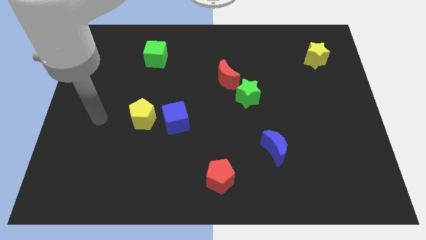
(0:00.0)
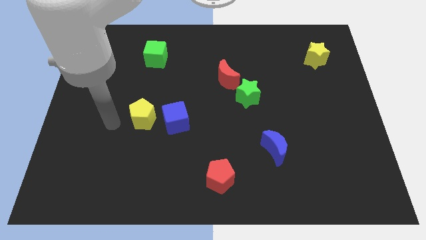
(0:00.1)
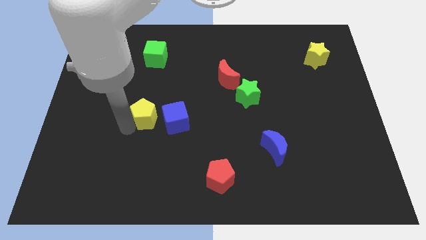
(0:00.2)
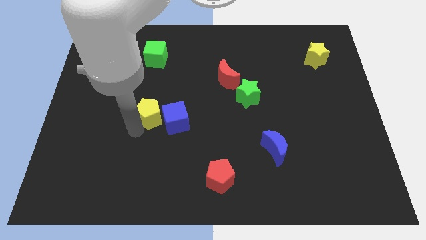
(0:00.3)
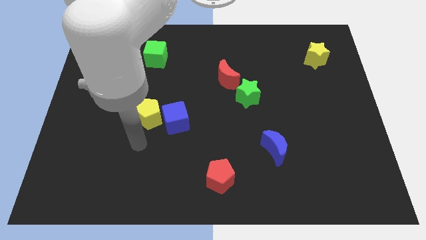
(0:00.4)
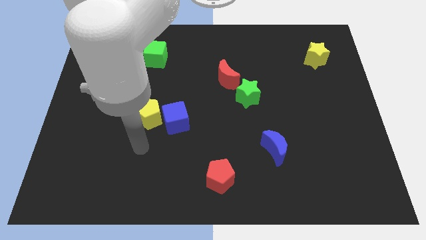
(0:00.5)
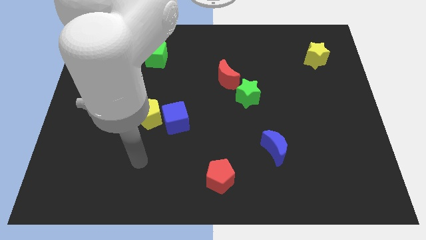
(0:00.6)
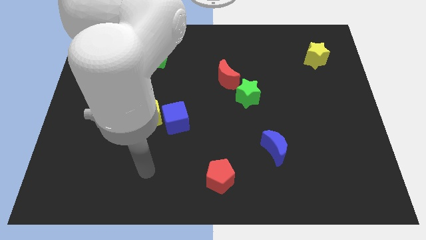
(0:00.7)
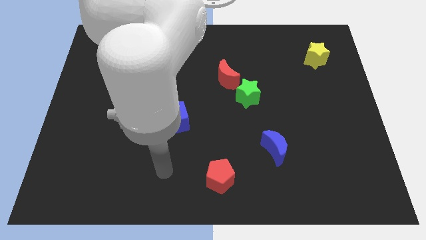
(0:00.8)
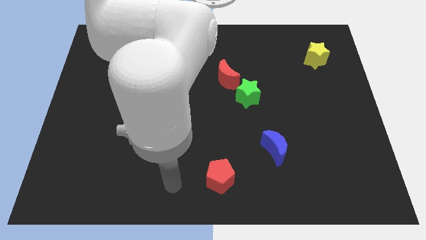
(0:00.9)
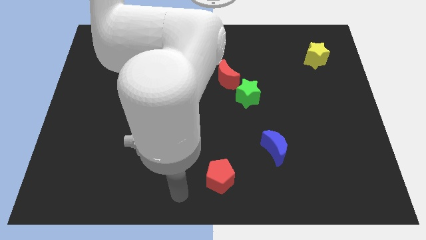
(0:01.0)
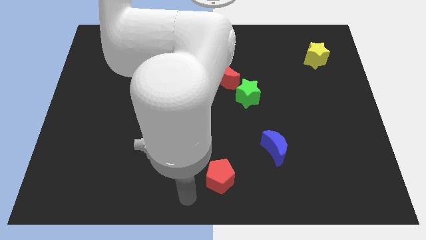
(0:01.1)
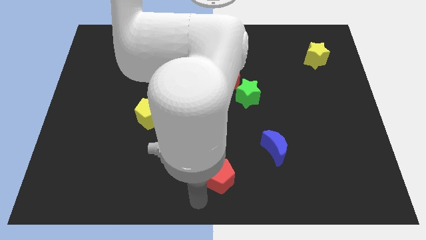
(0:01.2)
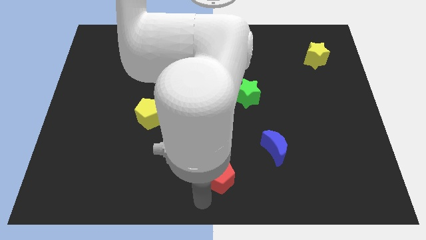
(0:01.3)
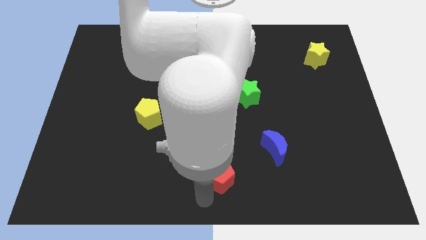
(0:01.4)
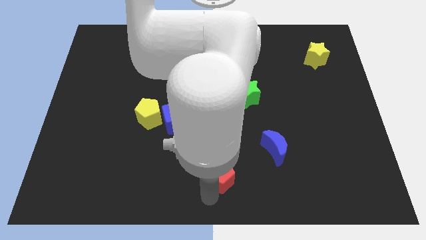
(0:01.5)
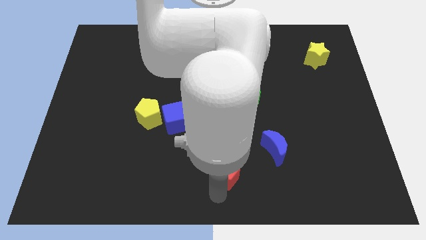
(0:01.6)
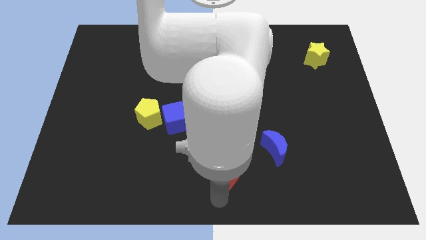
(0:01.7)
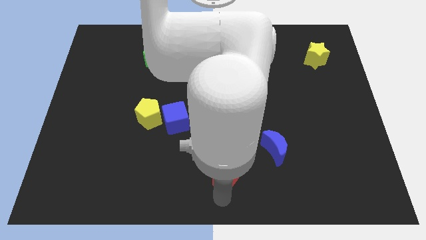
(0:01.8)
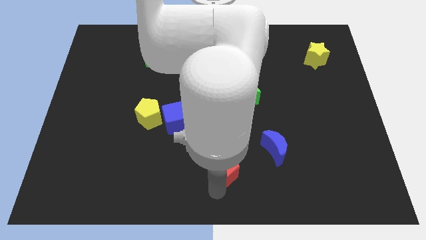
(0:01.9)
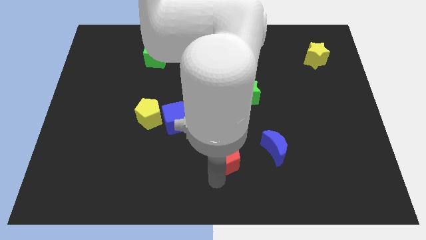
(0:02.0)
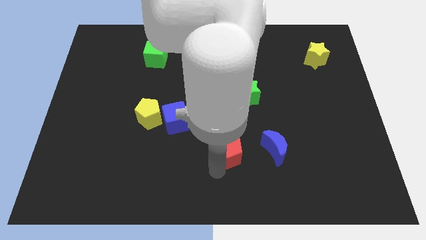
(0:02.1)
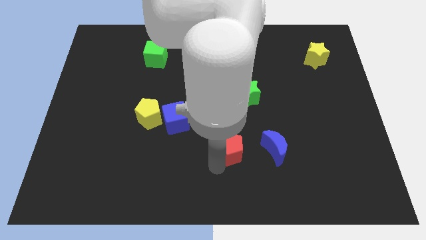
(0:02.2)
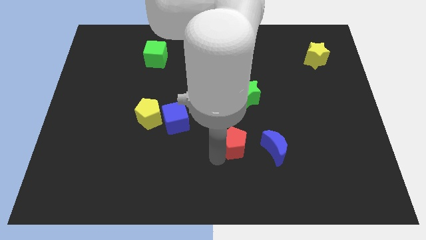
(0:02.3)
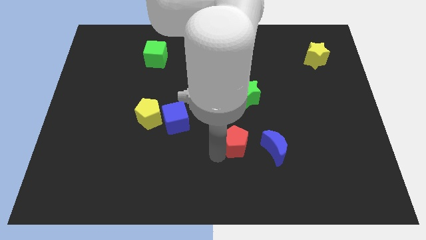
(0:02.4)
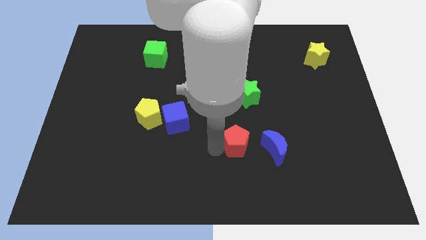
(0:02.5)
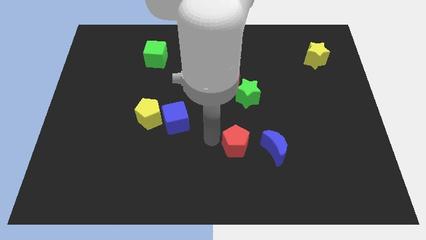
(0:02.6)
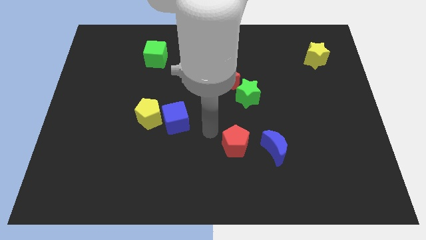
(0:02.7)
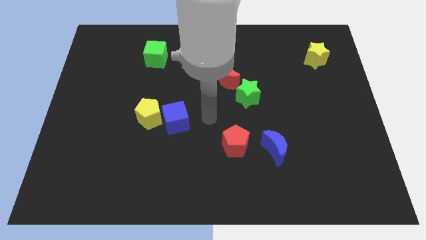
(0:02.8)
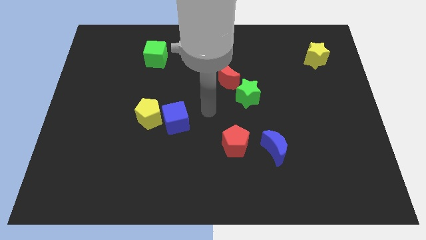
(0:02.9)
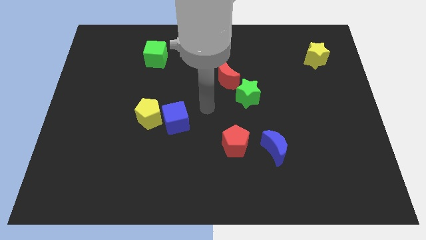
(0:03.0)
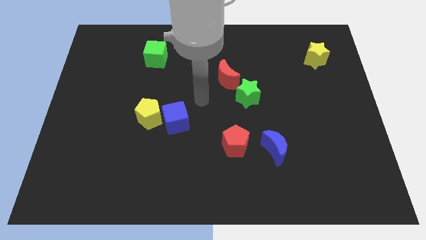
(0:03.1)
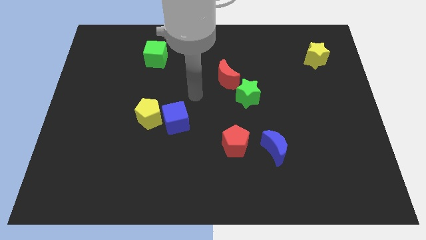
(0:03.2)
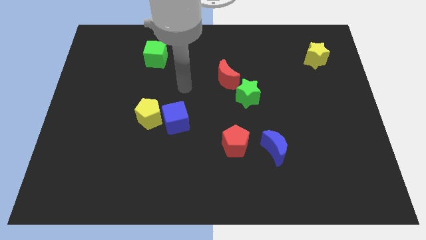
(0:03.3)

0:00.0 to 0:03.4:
place the red pentagon to the left of the blue moon

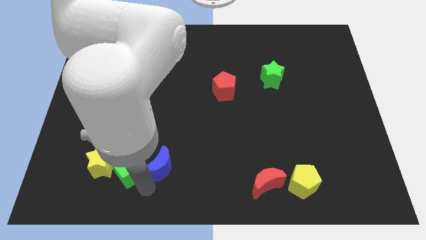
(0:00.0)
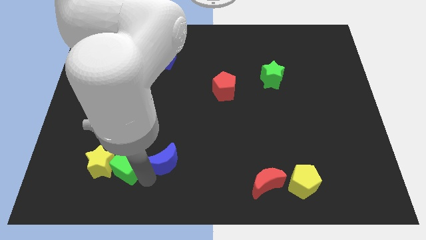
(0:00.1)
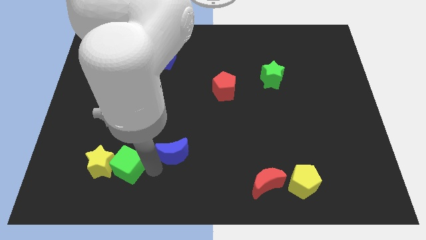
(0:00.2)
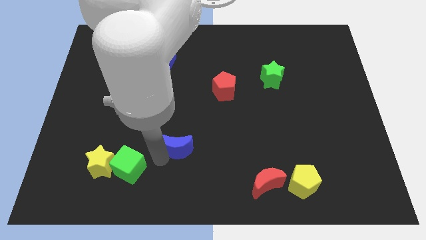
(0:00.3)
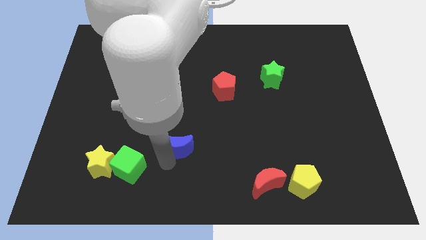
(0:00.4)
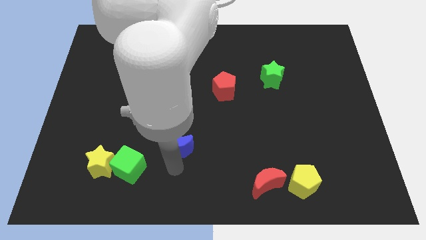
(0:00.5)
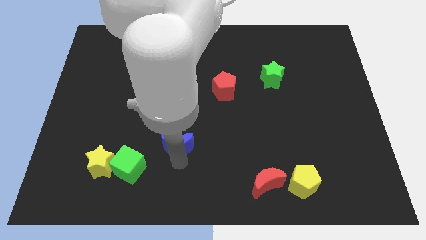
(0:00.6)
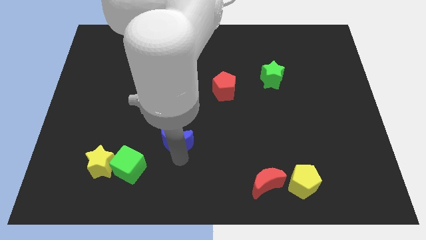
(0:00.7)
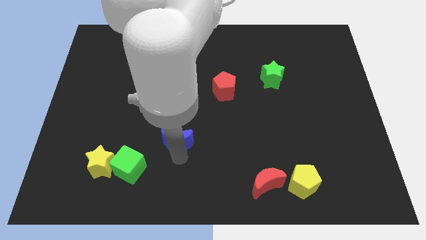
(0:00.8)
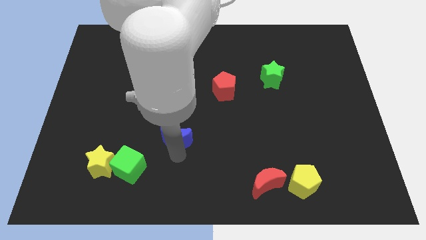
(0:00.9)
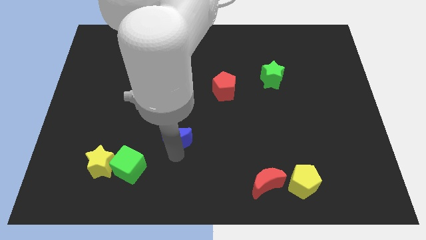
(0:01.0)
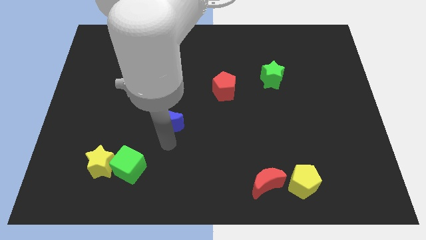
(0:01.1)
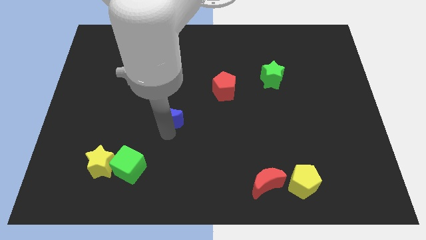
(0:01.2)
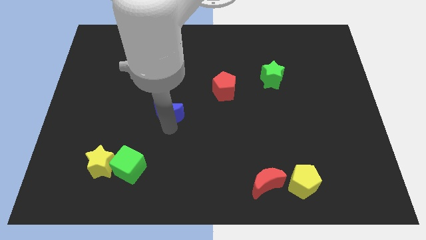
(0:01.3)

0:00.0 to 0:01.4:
slide the blue crescent towards the center

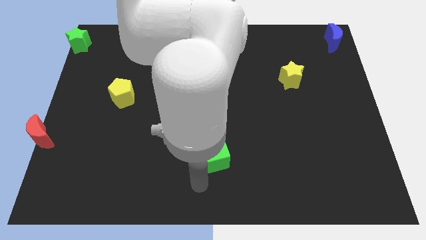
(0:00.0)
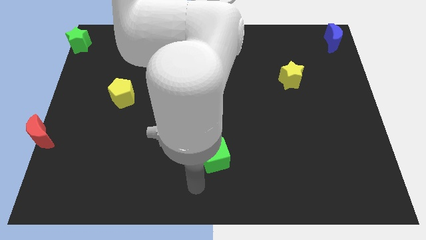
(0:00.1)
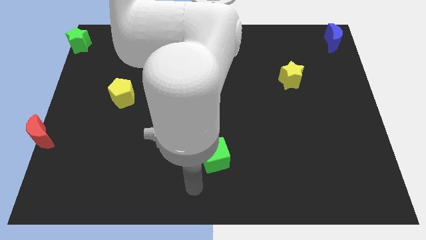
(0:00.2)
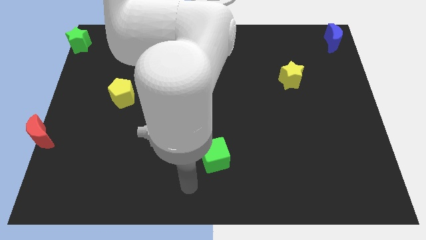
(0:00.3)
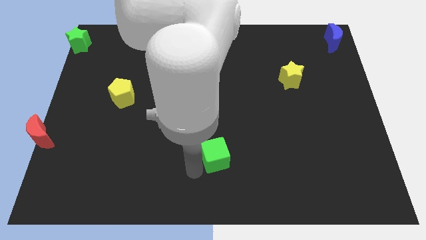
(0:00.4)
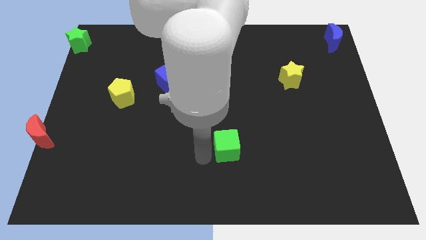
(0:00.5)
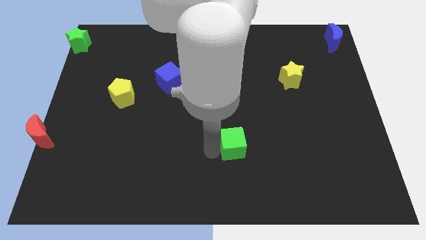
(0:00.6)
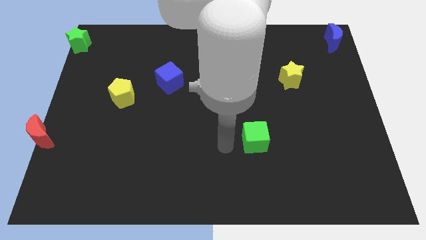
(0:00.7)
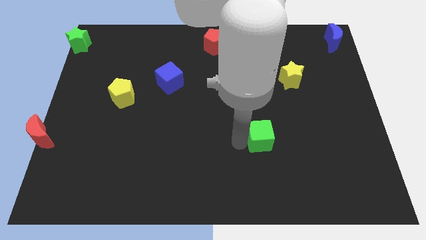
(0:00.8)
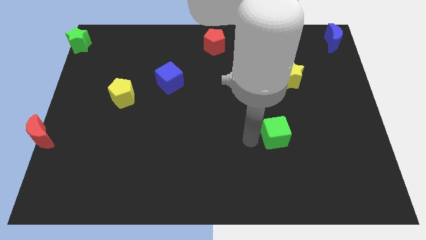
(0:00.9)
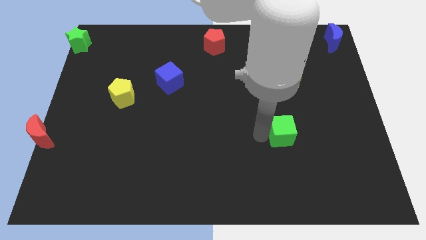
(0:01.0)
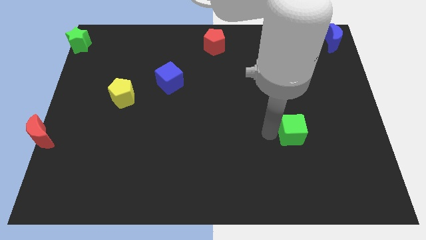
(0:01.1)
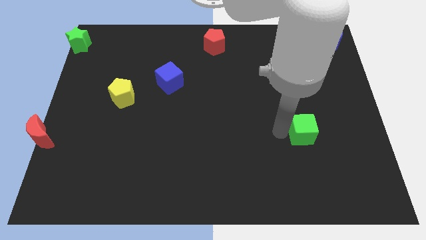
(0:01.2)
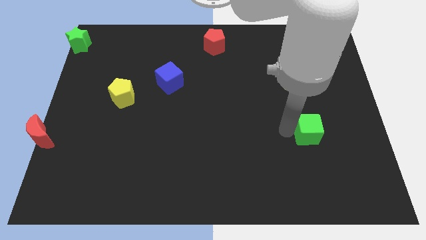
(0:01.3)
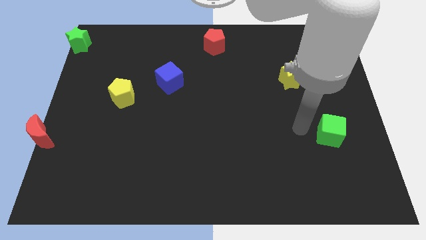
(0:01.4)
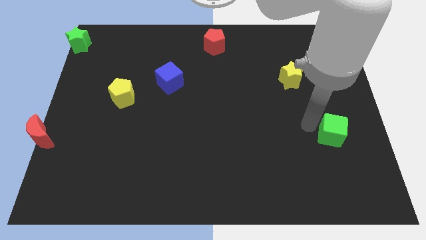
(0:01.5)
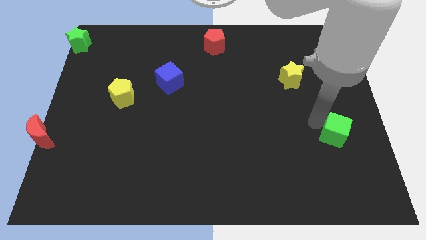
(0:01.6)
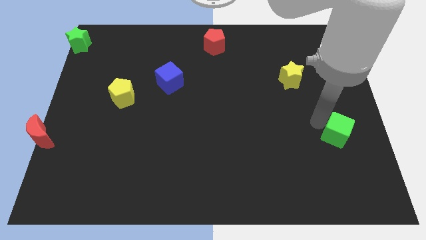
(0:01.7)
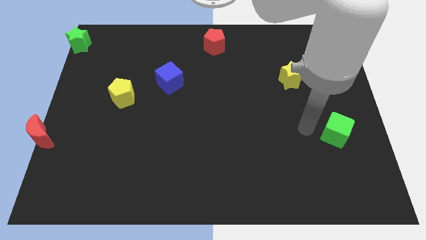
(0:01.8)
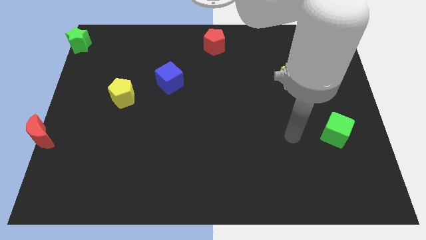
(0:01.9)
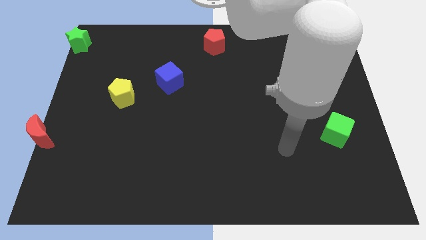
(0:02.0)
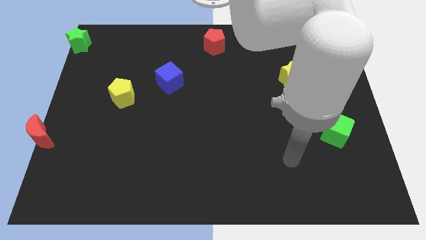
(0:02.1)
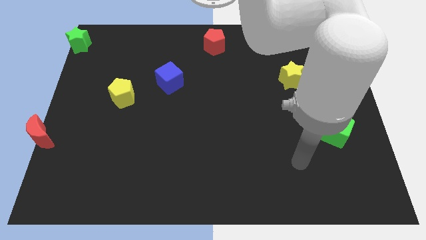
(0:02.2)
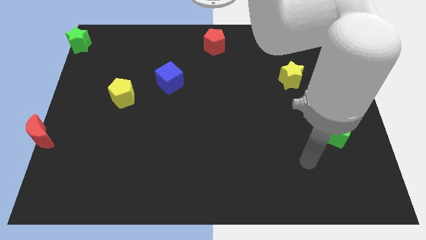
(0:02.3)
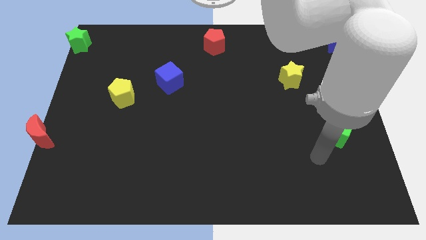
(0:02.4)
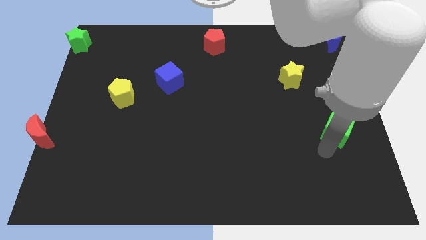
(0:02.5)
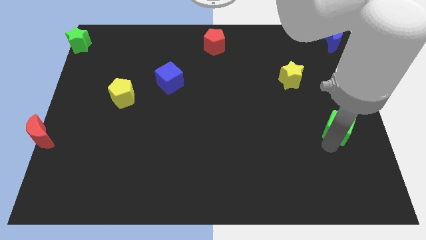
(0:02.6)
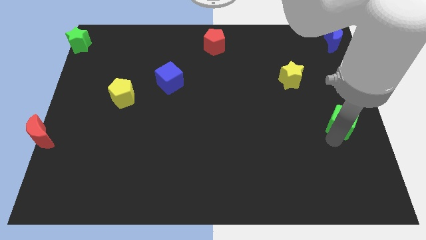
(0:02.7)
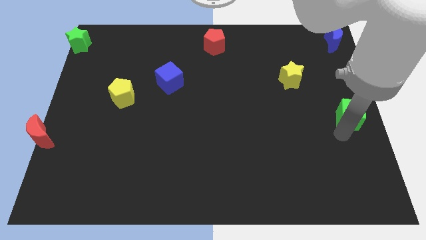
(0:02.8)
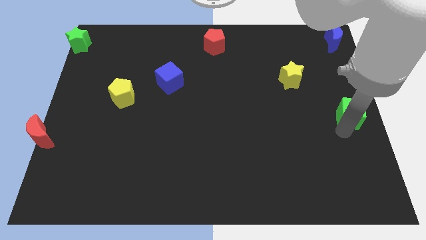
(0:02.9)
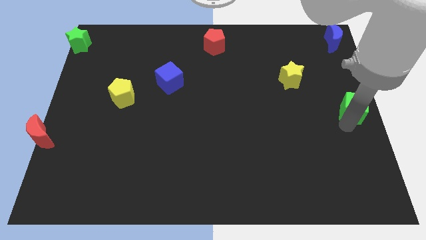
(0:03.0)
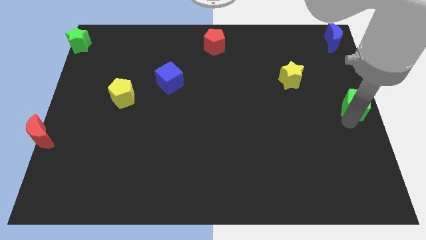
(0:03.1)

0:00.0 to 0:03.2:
slide the green cube towards the center right of the board

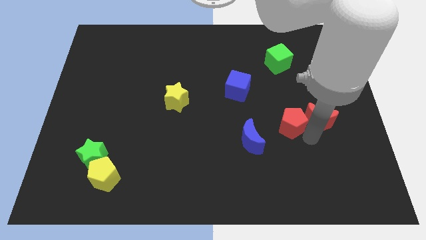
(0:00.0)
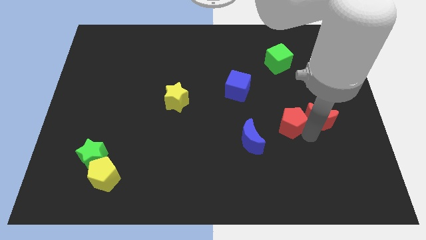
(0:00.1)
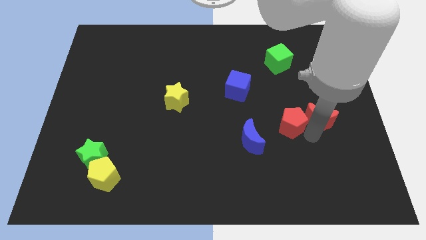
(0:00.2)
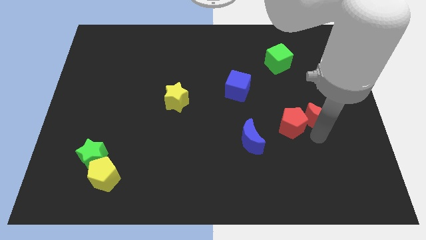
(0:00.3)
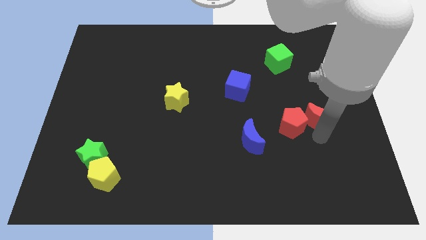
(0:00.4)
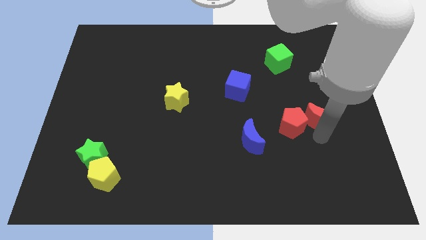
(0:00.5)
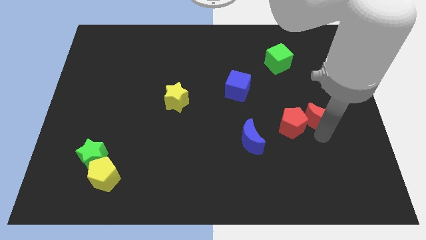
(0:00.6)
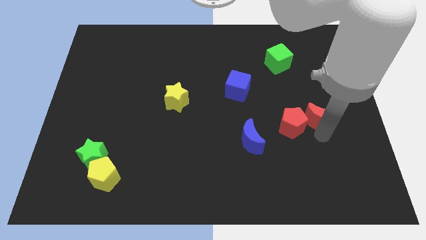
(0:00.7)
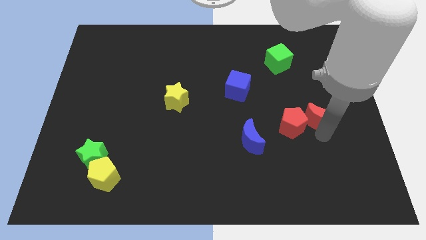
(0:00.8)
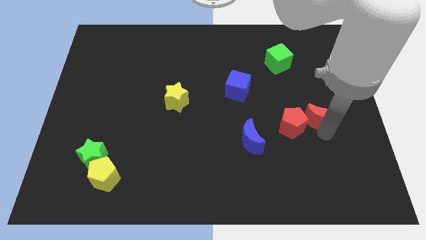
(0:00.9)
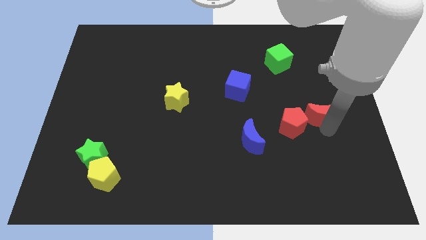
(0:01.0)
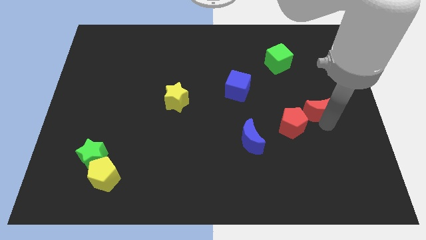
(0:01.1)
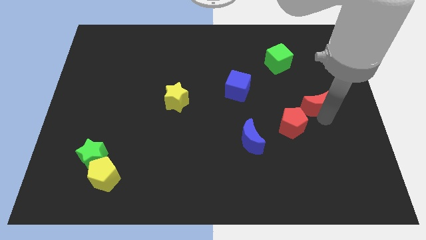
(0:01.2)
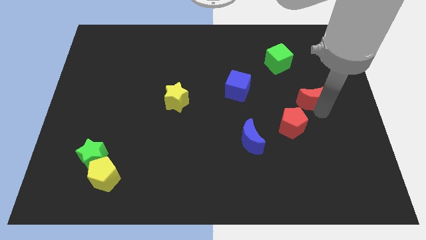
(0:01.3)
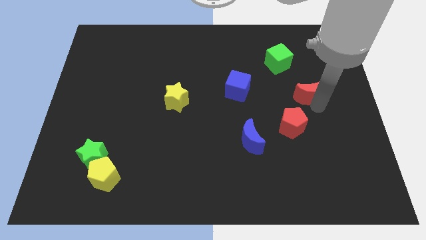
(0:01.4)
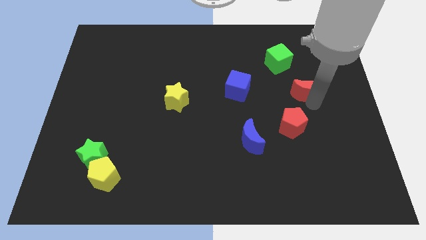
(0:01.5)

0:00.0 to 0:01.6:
separate the red moon from the red pentagon
